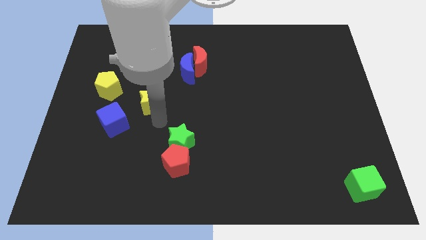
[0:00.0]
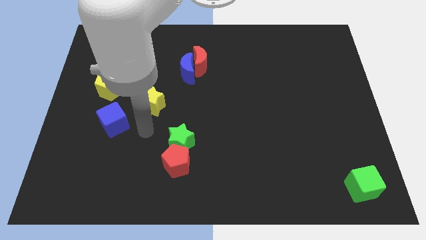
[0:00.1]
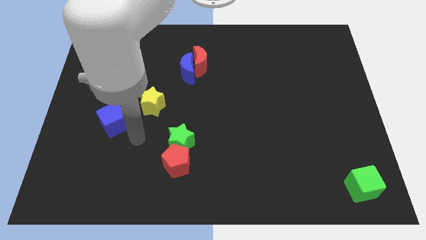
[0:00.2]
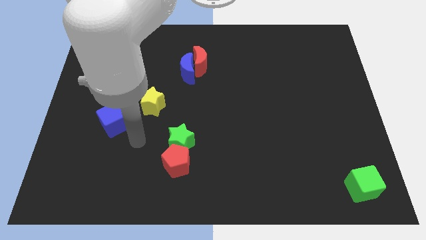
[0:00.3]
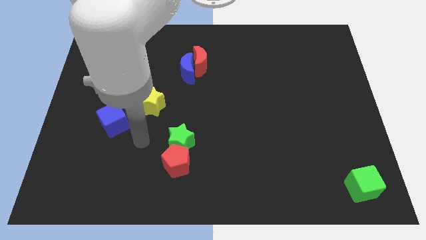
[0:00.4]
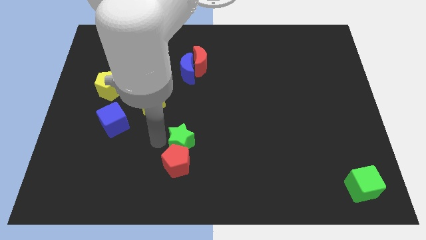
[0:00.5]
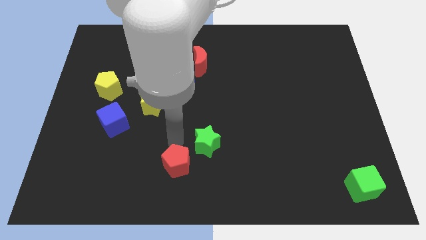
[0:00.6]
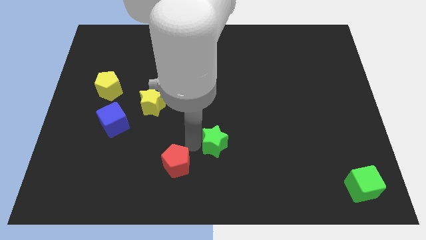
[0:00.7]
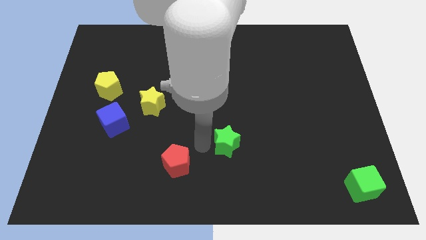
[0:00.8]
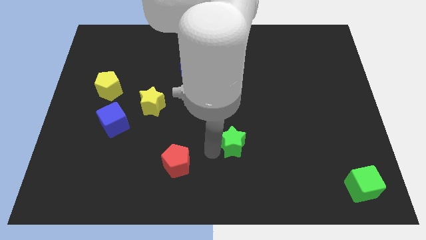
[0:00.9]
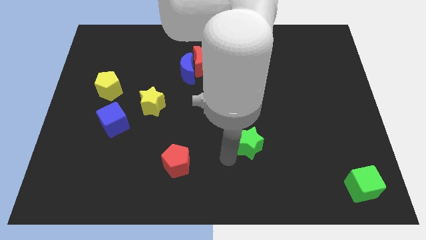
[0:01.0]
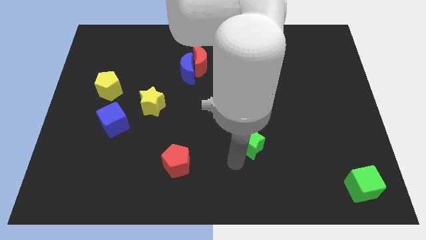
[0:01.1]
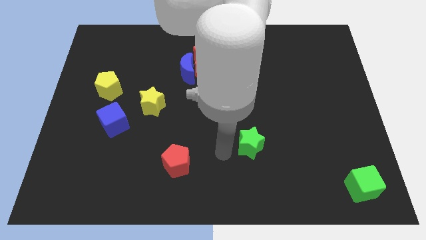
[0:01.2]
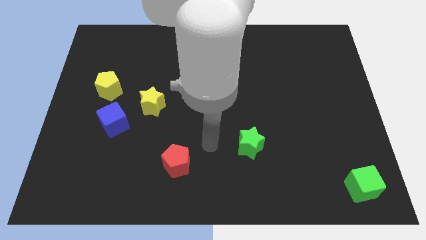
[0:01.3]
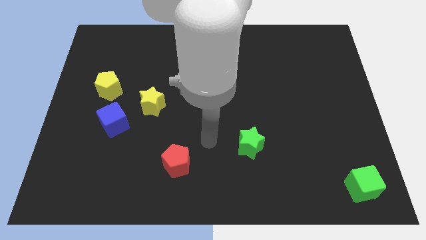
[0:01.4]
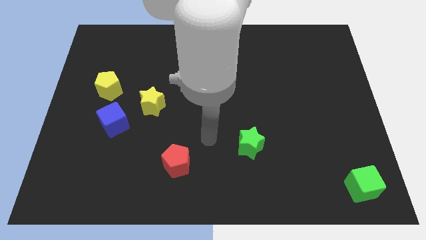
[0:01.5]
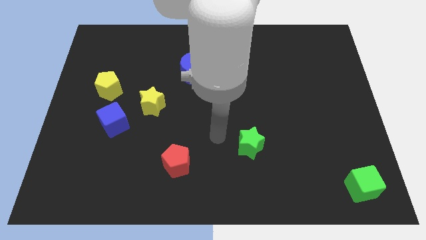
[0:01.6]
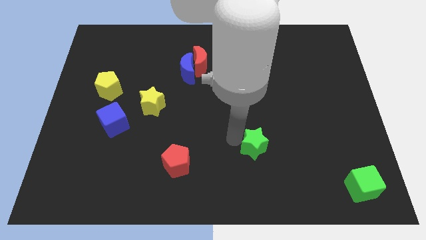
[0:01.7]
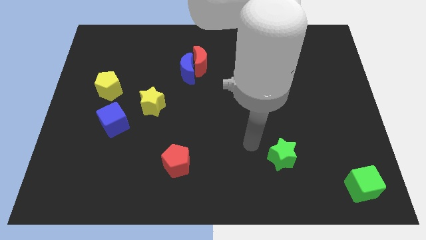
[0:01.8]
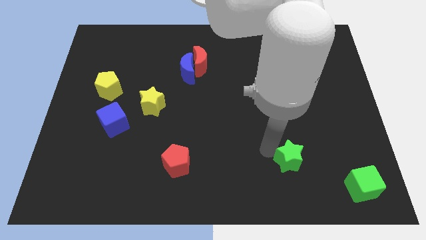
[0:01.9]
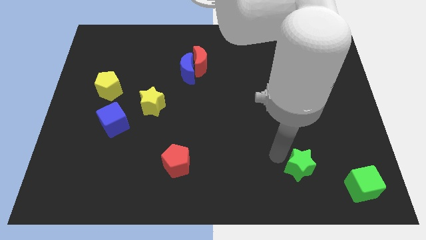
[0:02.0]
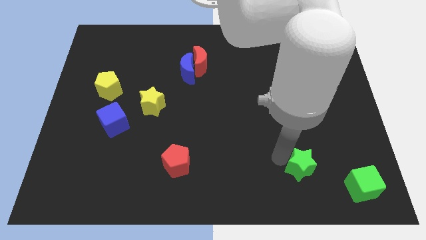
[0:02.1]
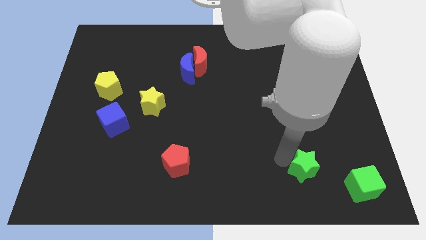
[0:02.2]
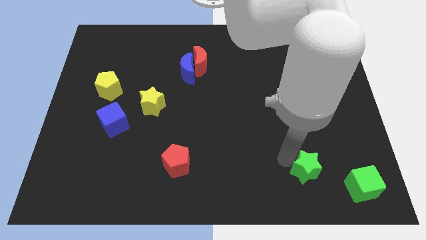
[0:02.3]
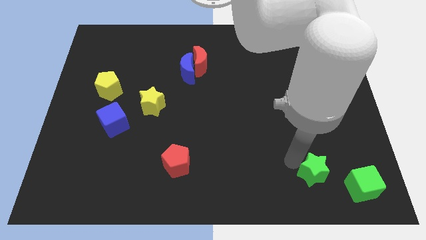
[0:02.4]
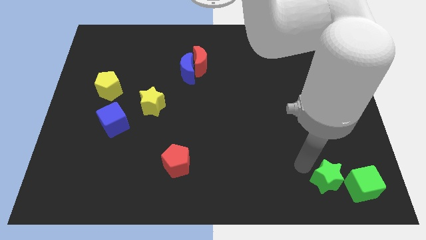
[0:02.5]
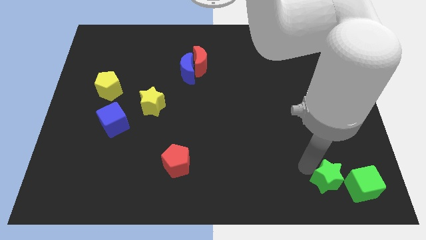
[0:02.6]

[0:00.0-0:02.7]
push the green star into the green cube

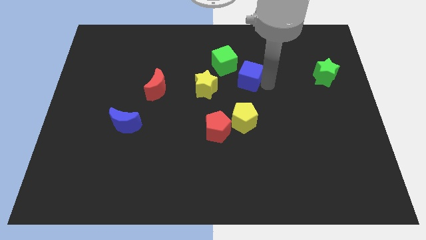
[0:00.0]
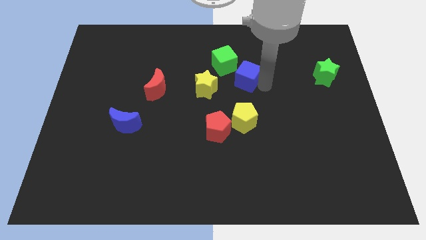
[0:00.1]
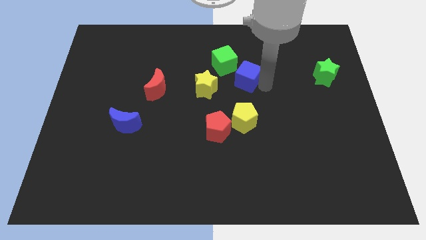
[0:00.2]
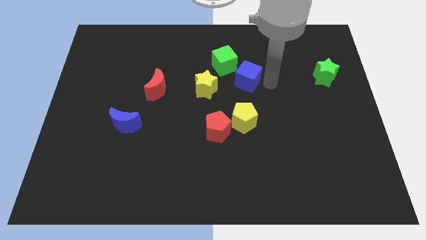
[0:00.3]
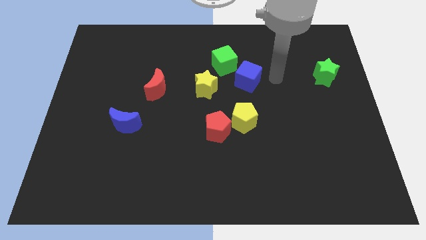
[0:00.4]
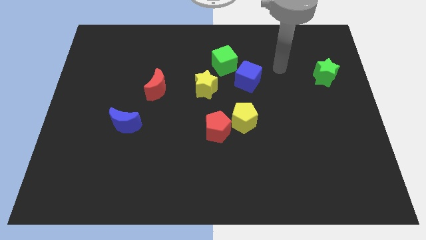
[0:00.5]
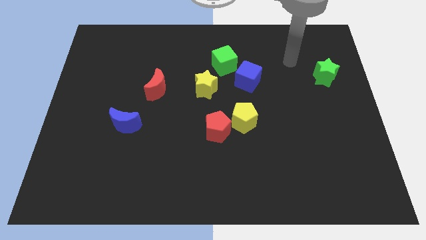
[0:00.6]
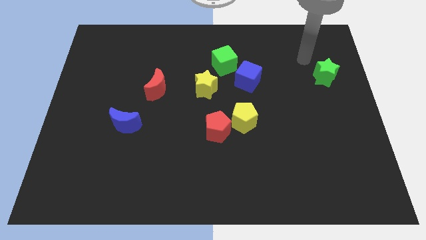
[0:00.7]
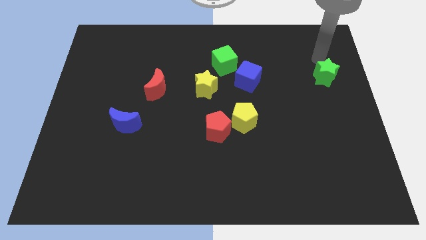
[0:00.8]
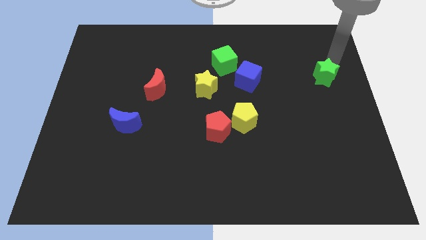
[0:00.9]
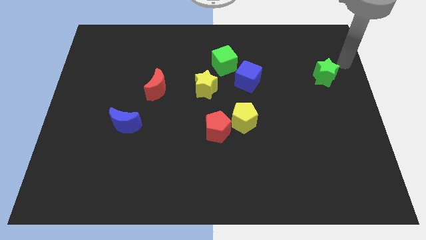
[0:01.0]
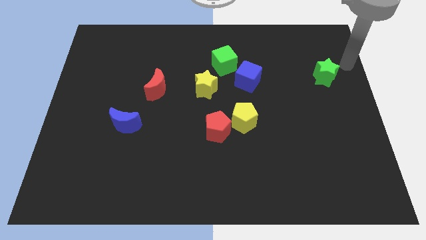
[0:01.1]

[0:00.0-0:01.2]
point the arm at the right side of the green star

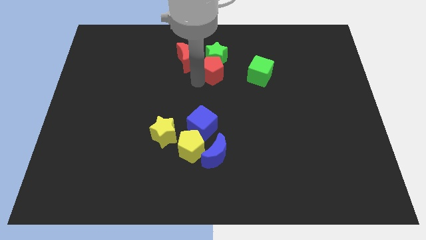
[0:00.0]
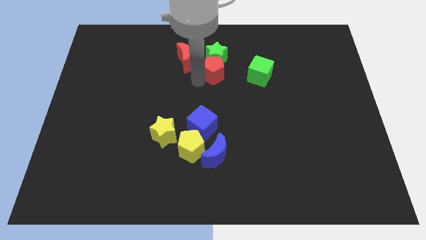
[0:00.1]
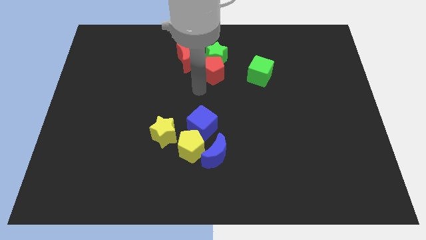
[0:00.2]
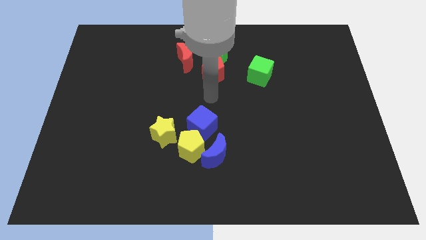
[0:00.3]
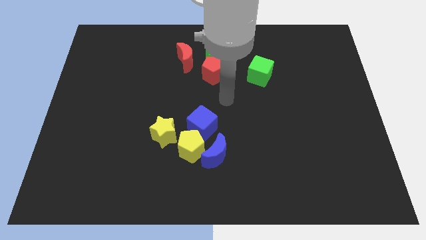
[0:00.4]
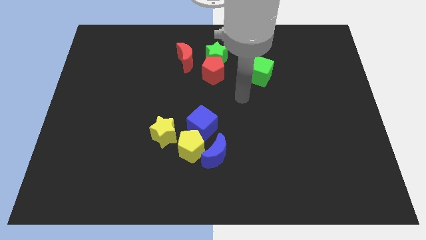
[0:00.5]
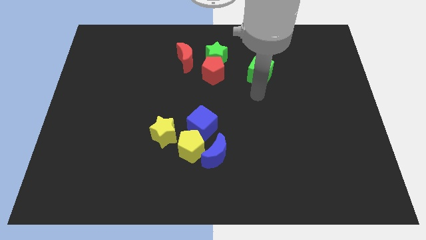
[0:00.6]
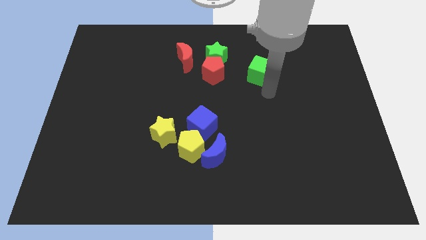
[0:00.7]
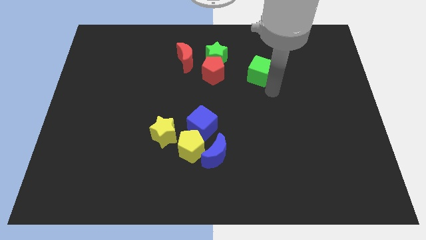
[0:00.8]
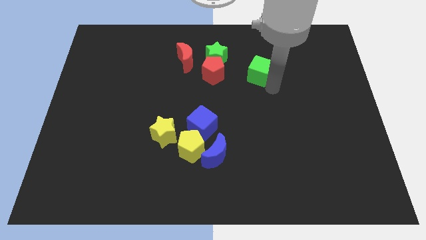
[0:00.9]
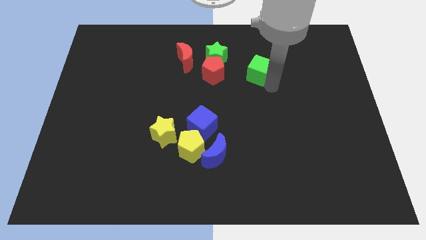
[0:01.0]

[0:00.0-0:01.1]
slightly move the green cube towards top side

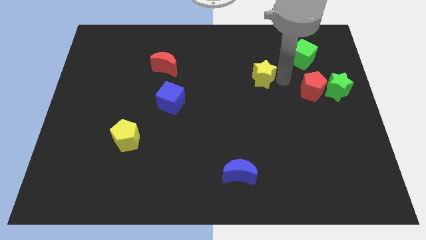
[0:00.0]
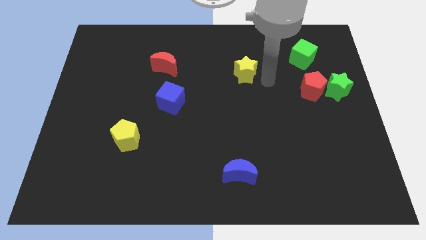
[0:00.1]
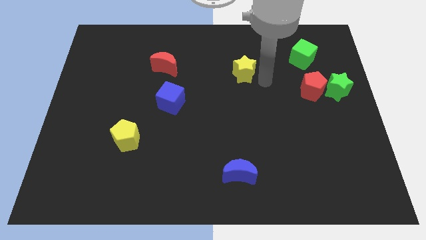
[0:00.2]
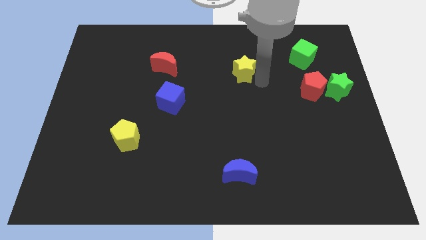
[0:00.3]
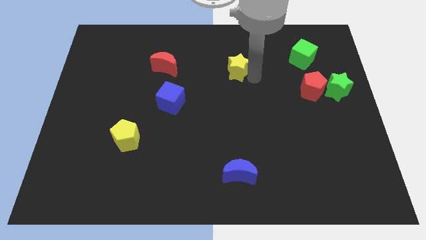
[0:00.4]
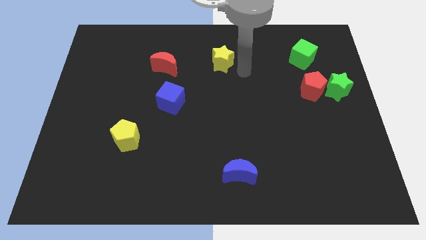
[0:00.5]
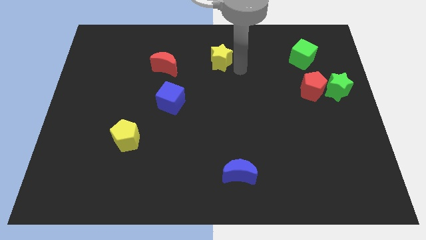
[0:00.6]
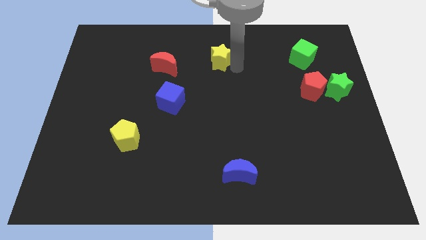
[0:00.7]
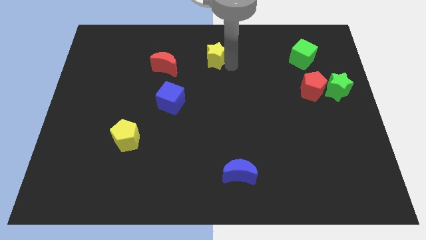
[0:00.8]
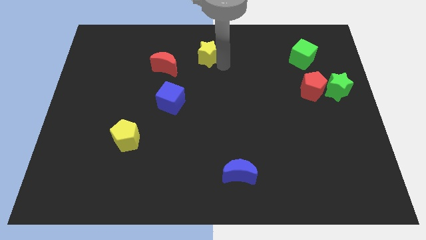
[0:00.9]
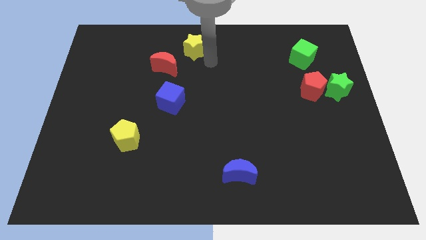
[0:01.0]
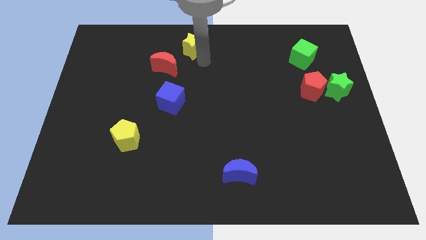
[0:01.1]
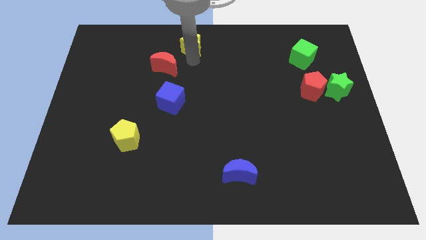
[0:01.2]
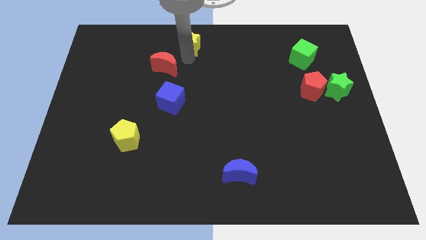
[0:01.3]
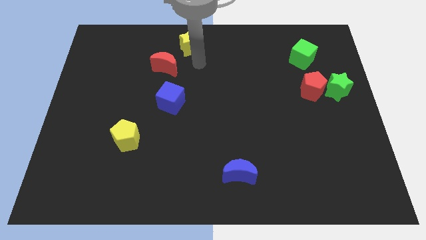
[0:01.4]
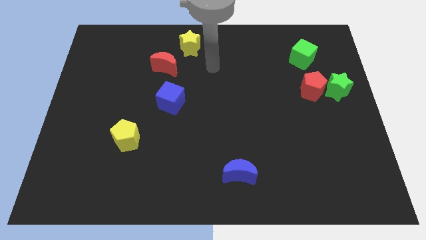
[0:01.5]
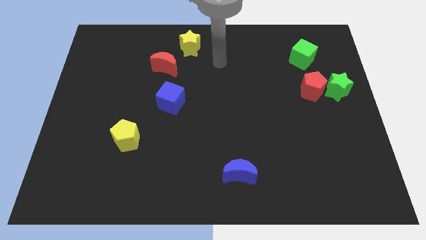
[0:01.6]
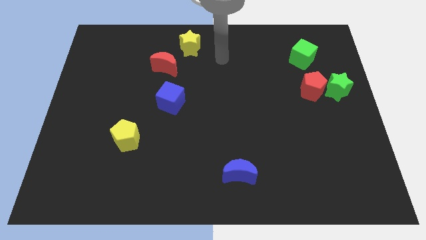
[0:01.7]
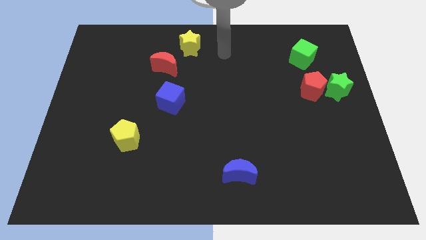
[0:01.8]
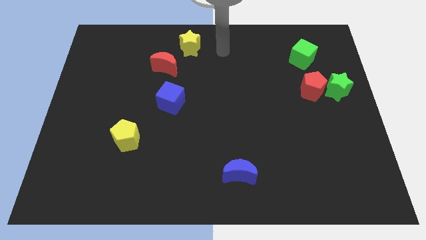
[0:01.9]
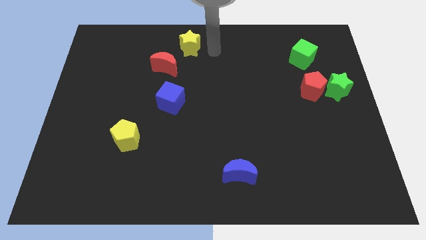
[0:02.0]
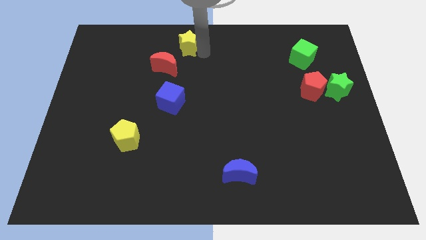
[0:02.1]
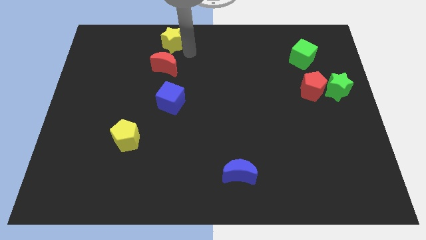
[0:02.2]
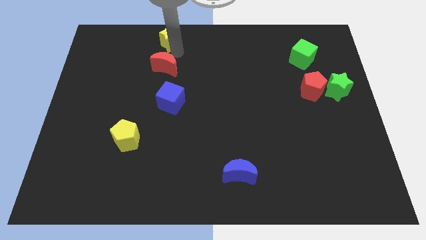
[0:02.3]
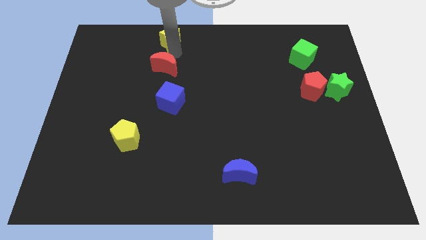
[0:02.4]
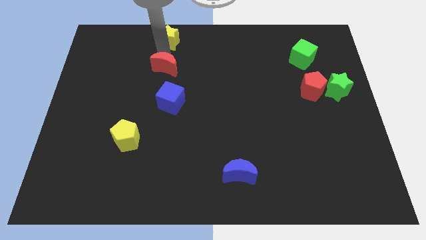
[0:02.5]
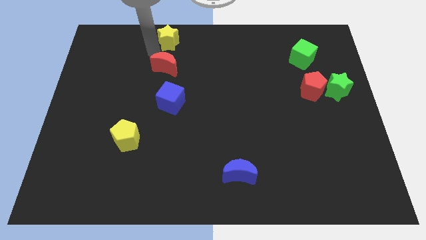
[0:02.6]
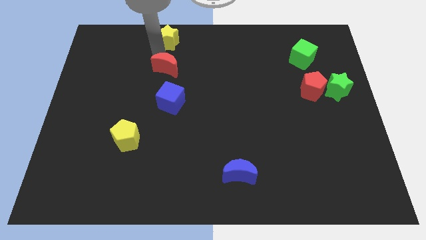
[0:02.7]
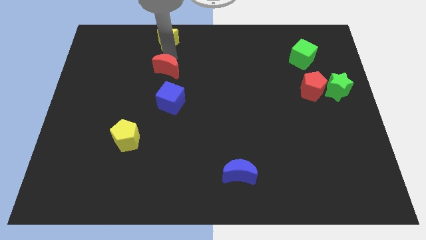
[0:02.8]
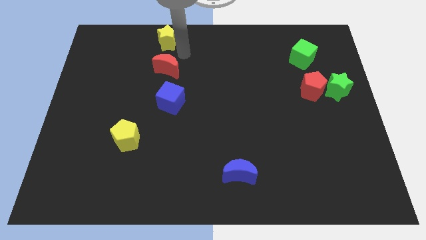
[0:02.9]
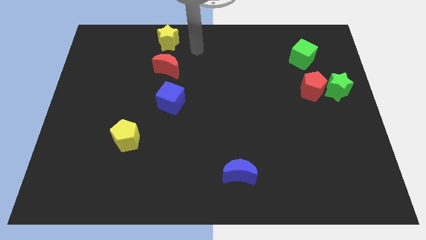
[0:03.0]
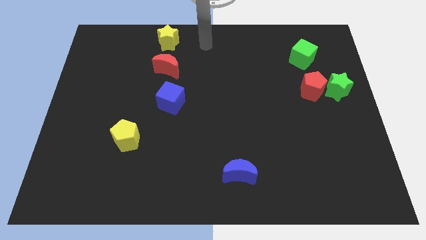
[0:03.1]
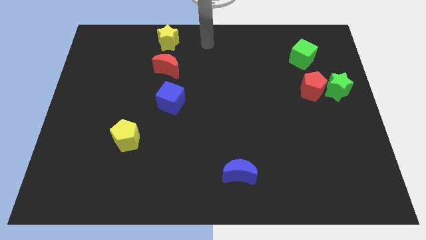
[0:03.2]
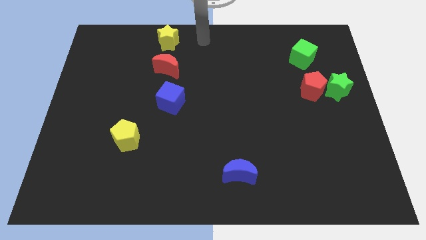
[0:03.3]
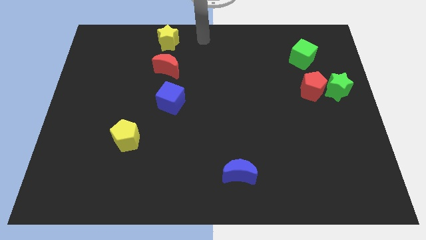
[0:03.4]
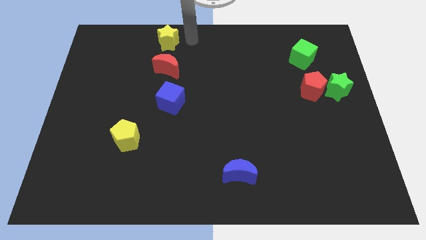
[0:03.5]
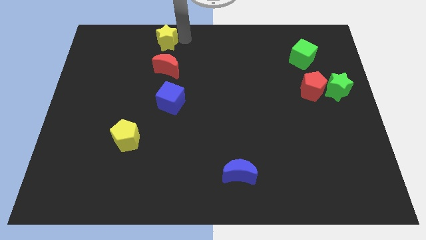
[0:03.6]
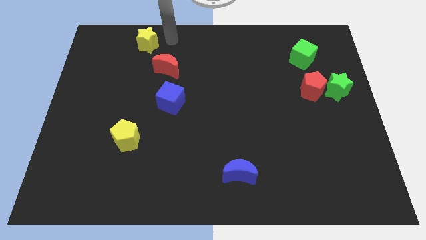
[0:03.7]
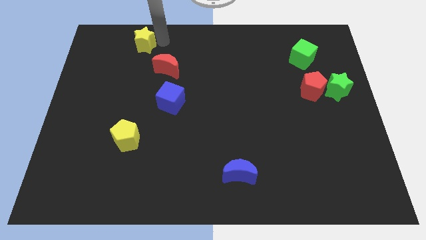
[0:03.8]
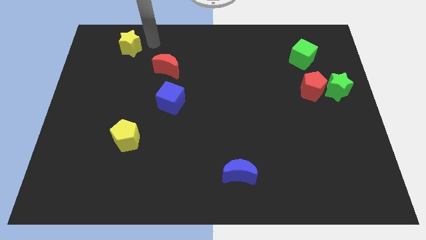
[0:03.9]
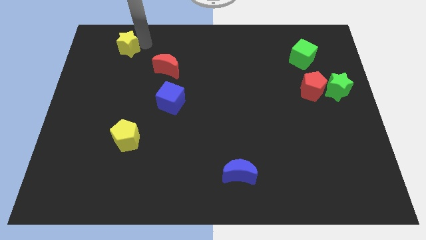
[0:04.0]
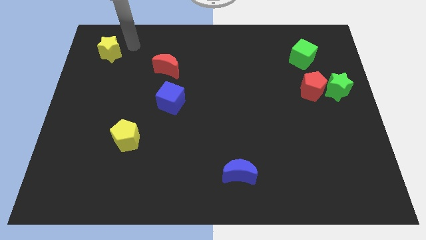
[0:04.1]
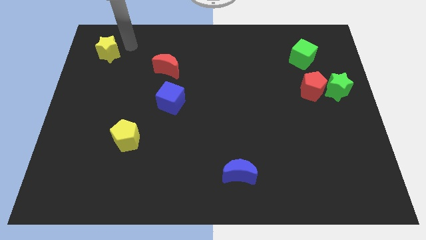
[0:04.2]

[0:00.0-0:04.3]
move the yellow star to the left of the board
